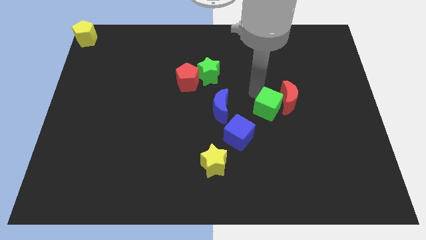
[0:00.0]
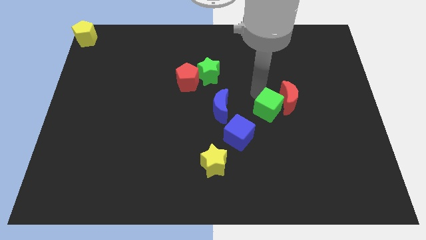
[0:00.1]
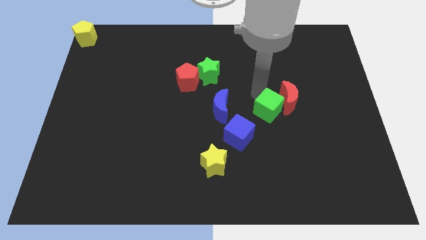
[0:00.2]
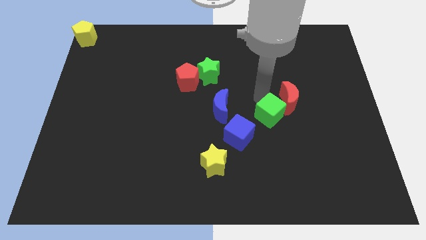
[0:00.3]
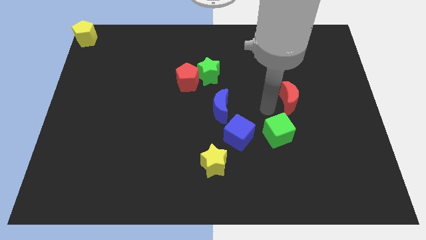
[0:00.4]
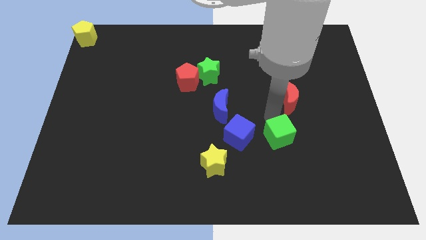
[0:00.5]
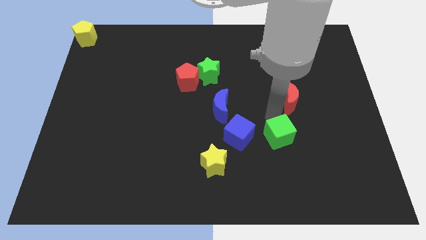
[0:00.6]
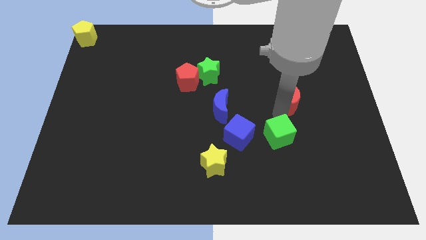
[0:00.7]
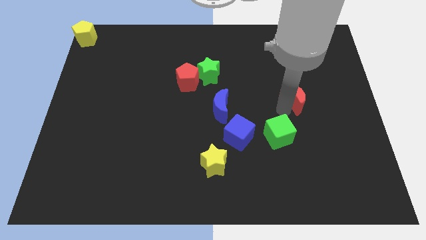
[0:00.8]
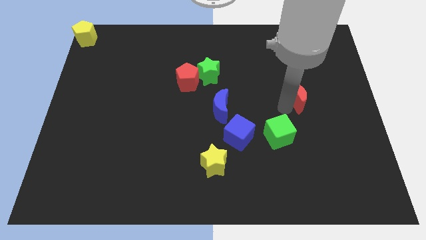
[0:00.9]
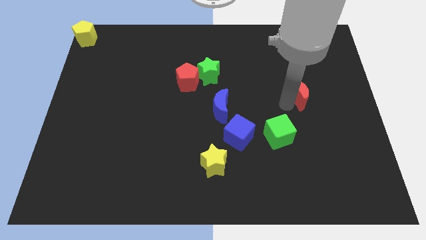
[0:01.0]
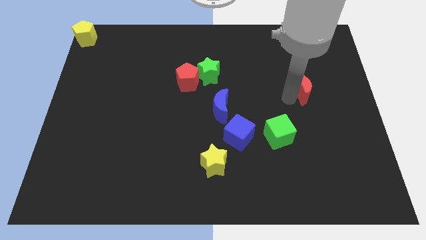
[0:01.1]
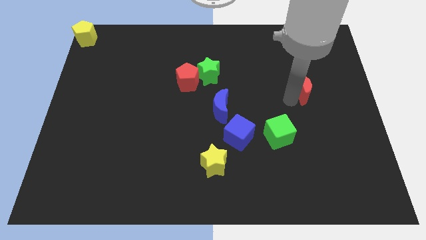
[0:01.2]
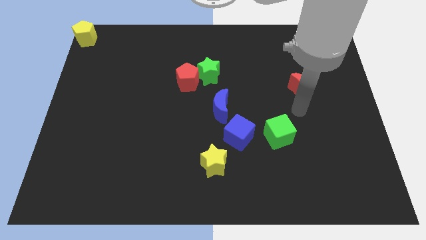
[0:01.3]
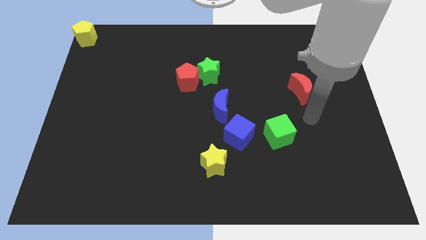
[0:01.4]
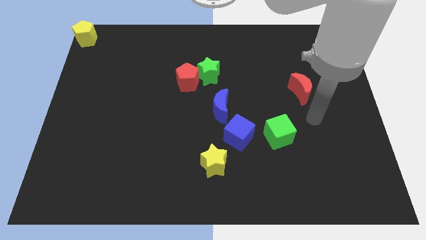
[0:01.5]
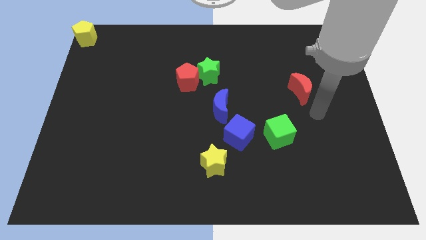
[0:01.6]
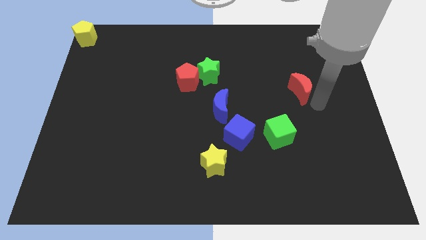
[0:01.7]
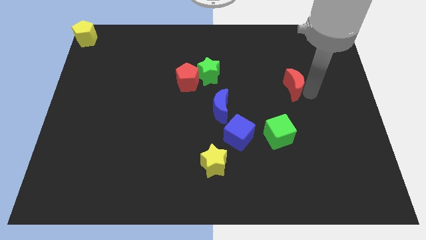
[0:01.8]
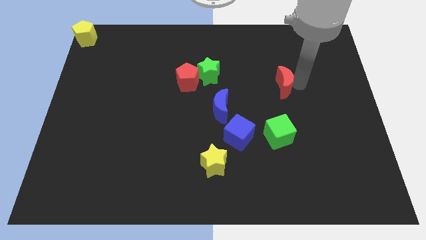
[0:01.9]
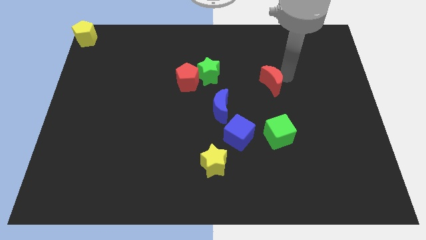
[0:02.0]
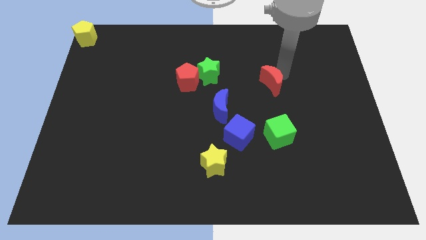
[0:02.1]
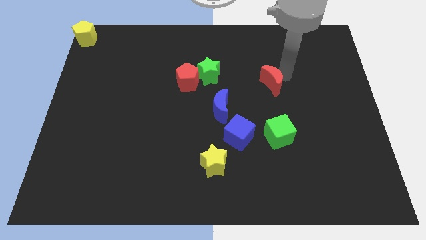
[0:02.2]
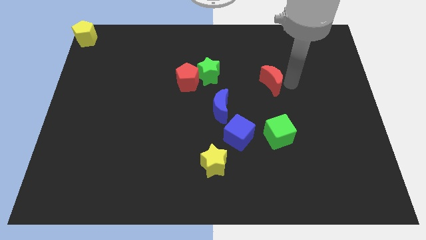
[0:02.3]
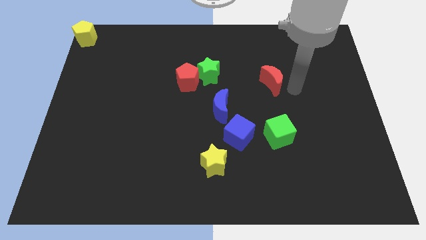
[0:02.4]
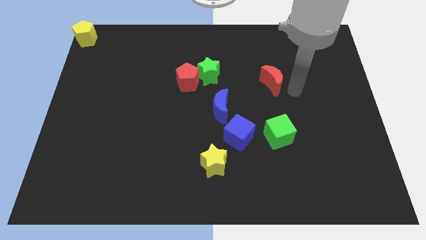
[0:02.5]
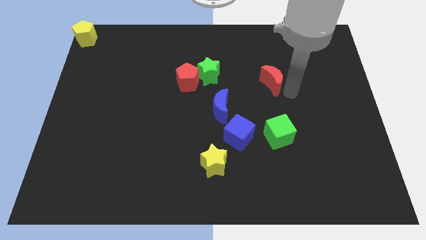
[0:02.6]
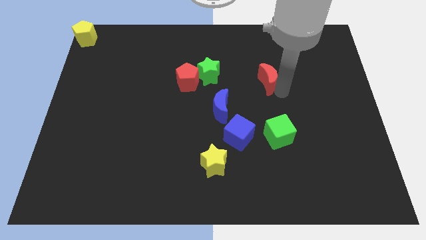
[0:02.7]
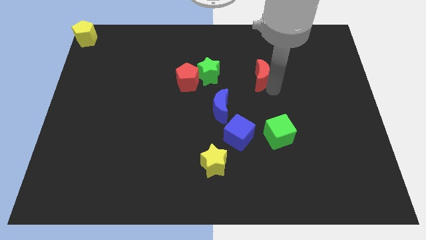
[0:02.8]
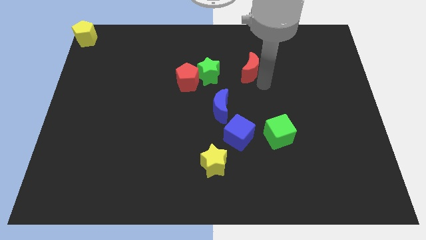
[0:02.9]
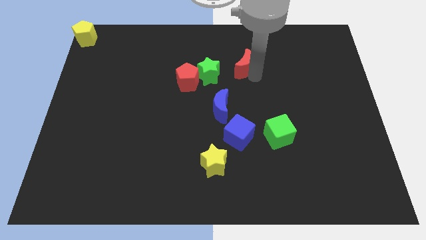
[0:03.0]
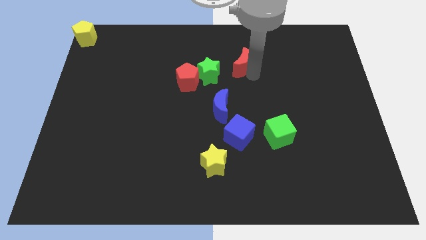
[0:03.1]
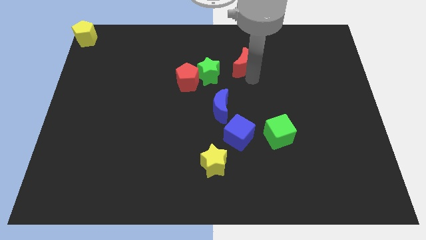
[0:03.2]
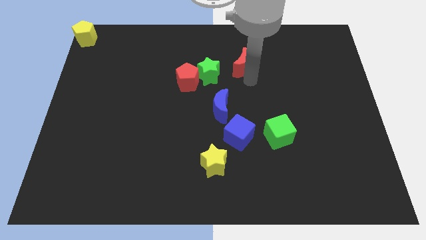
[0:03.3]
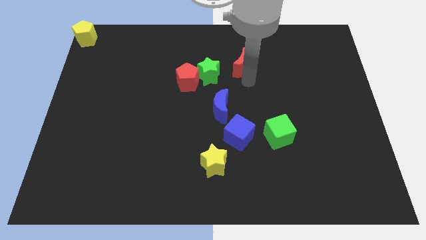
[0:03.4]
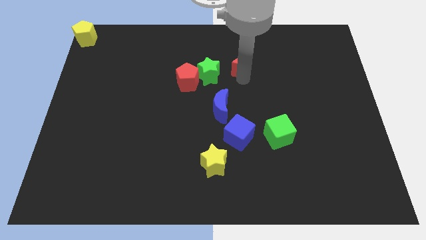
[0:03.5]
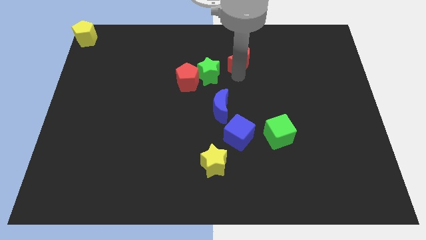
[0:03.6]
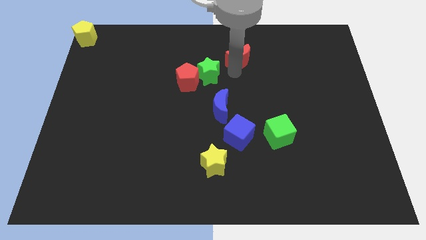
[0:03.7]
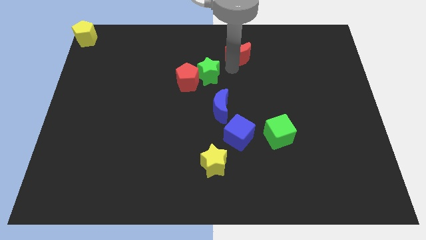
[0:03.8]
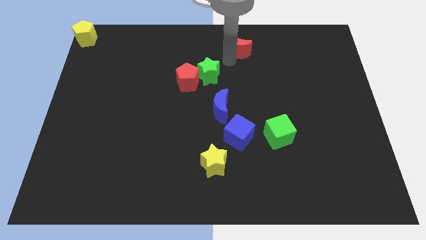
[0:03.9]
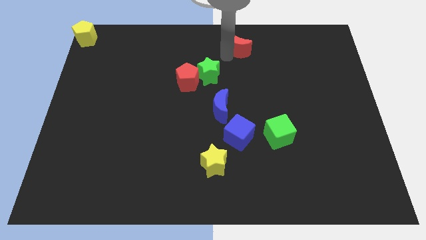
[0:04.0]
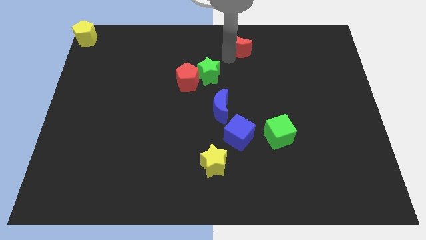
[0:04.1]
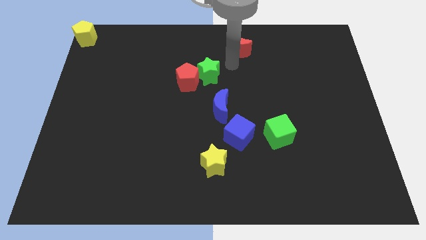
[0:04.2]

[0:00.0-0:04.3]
move the red crescent diagonal to green cube

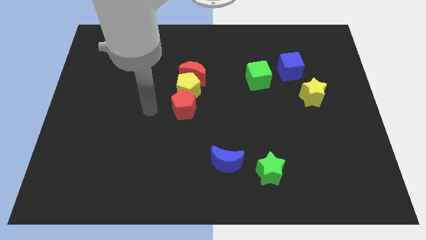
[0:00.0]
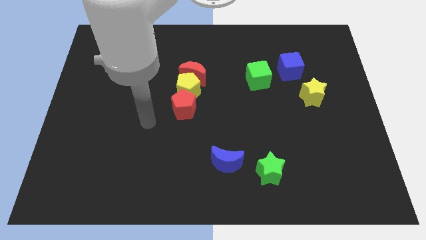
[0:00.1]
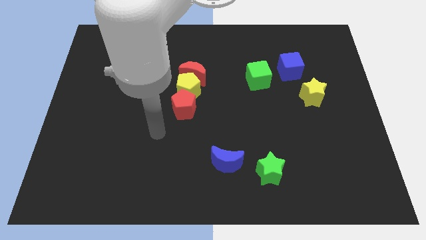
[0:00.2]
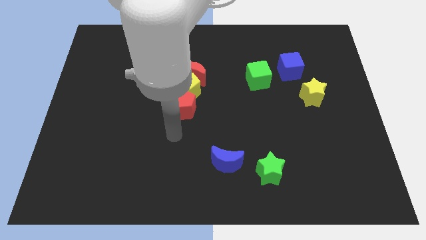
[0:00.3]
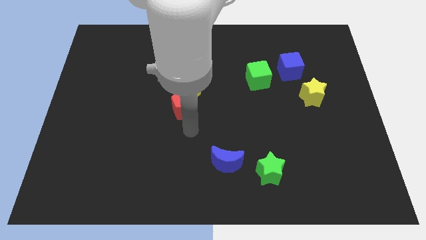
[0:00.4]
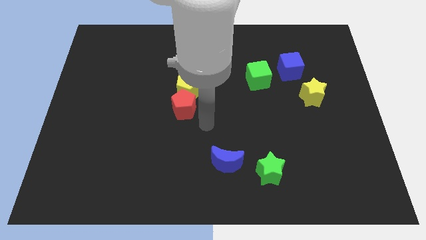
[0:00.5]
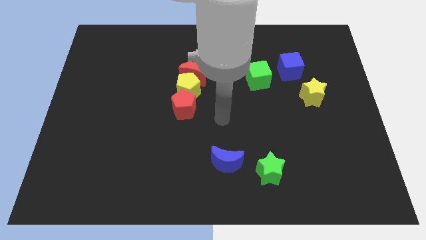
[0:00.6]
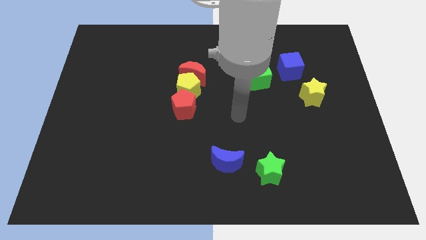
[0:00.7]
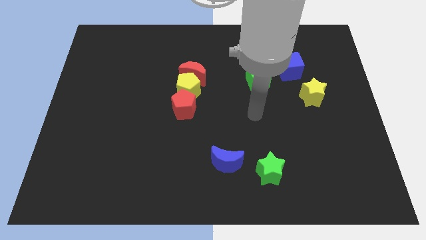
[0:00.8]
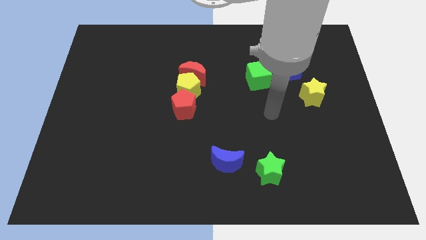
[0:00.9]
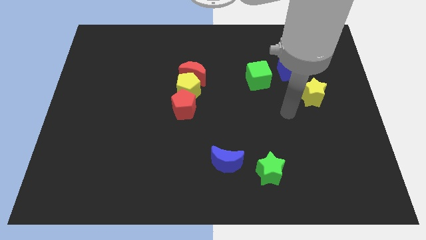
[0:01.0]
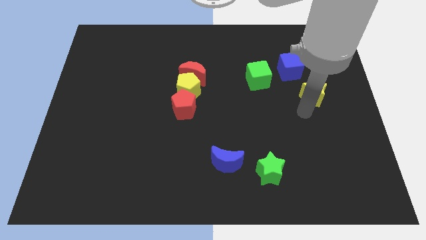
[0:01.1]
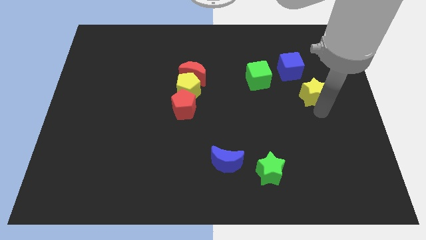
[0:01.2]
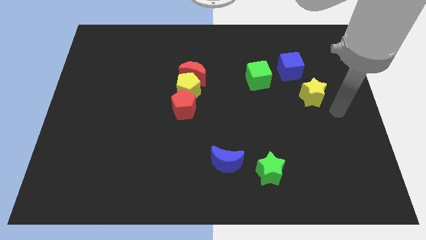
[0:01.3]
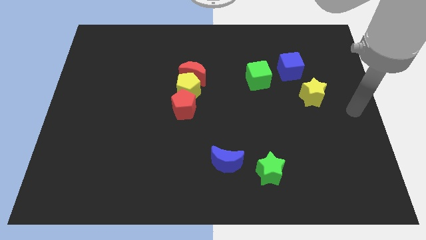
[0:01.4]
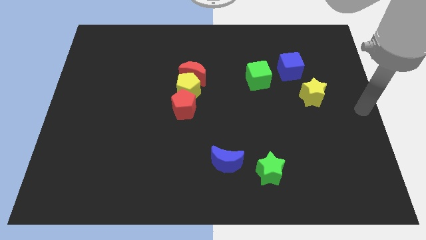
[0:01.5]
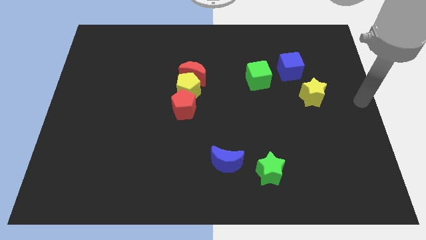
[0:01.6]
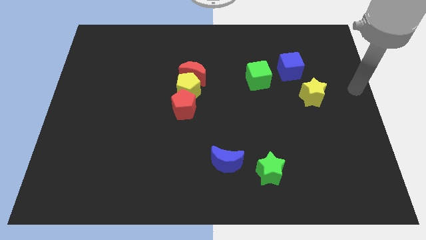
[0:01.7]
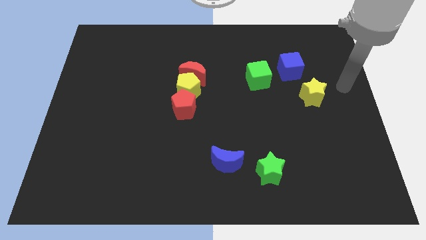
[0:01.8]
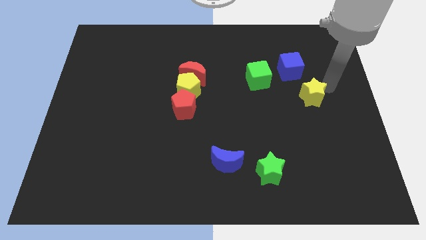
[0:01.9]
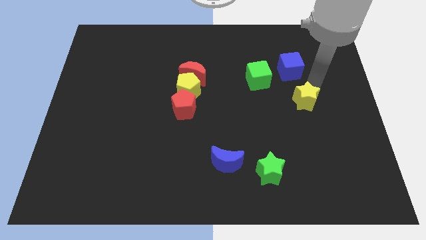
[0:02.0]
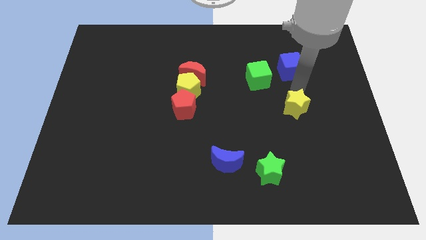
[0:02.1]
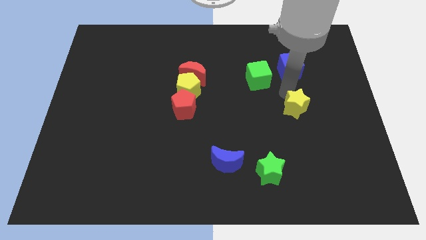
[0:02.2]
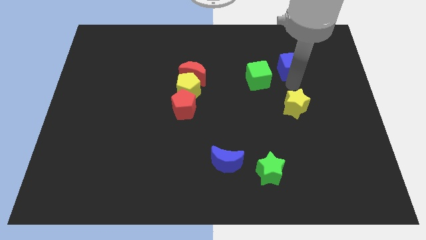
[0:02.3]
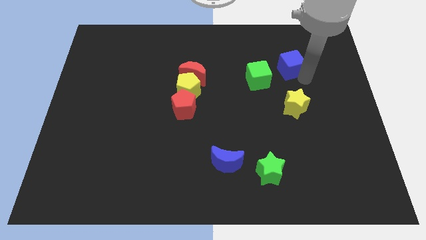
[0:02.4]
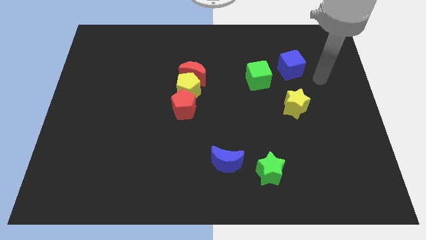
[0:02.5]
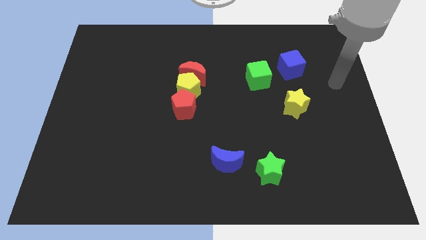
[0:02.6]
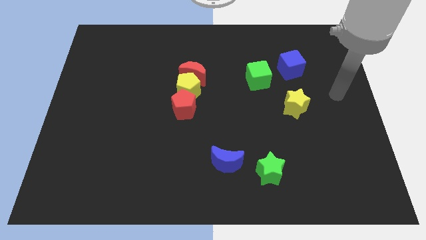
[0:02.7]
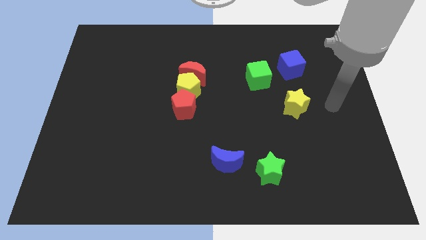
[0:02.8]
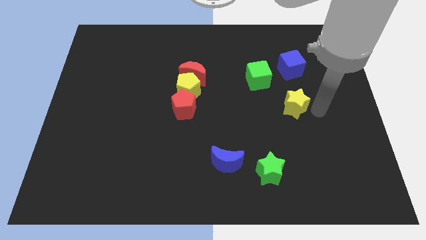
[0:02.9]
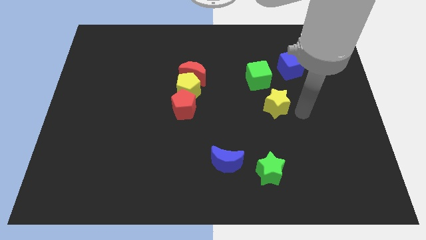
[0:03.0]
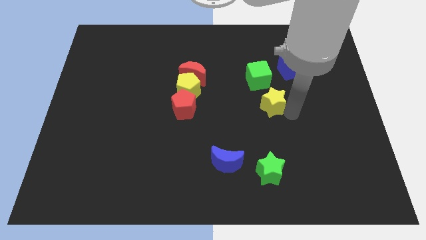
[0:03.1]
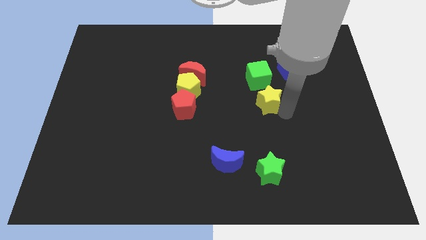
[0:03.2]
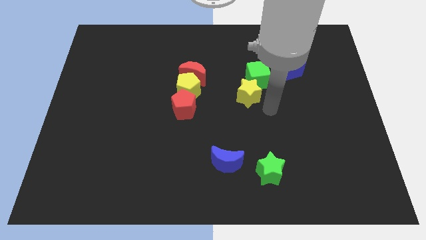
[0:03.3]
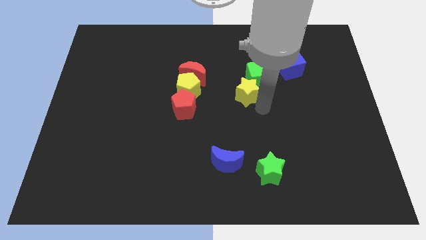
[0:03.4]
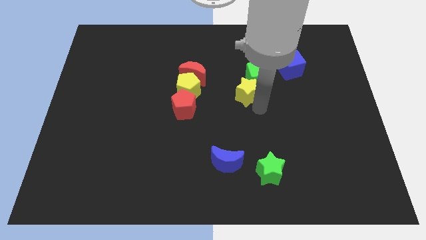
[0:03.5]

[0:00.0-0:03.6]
move the yellow star at the bottom left the green cube

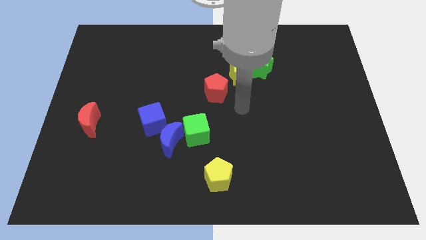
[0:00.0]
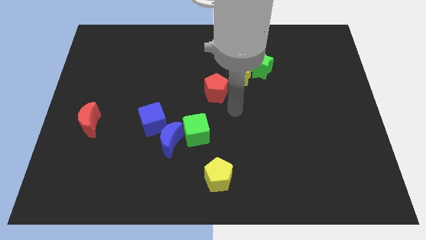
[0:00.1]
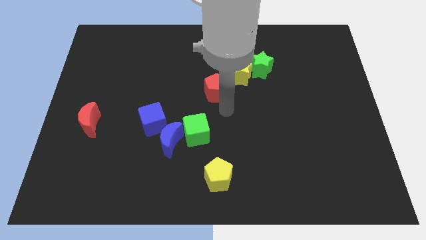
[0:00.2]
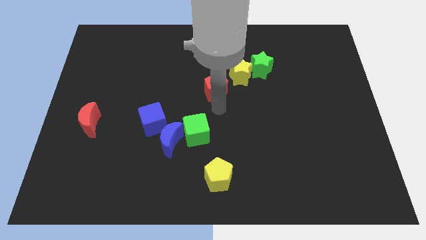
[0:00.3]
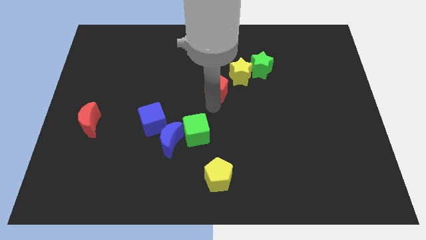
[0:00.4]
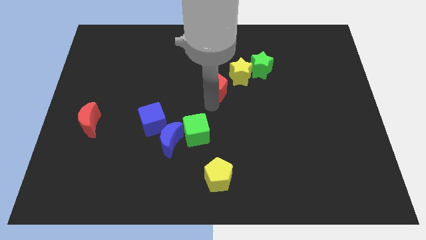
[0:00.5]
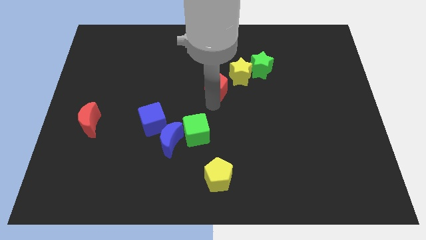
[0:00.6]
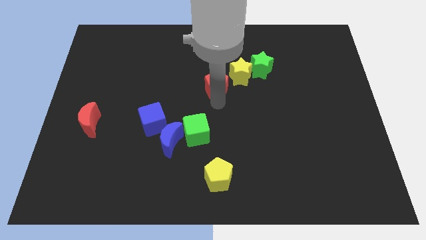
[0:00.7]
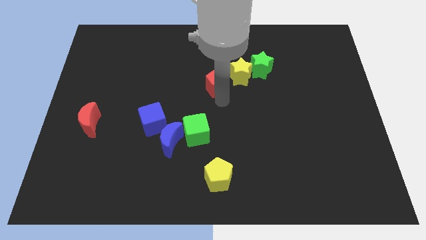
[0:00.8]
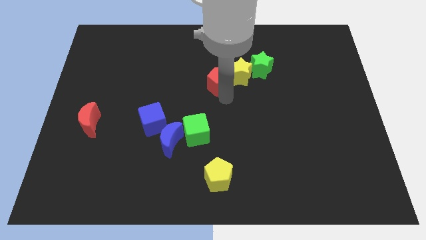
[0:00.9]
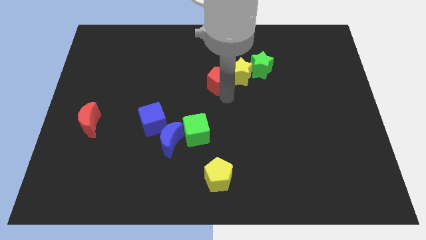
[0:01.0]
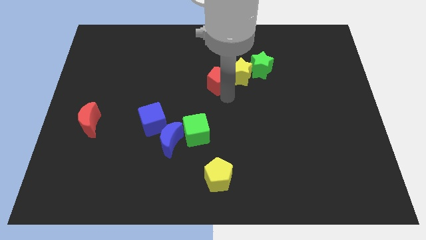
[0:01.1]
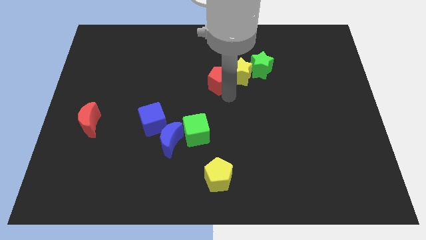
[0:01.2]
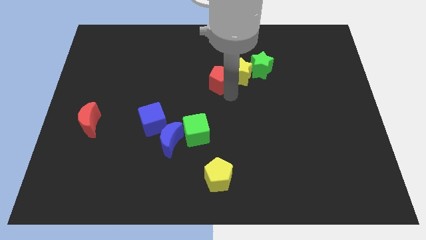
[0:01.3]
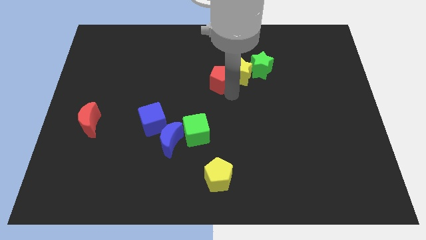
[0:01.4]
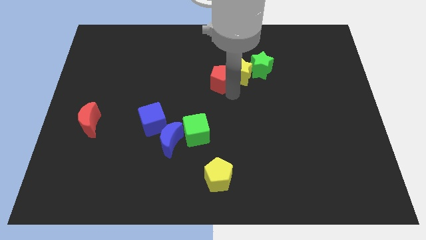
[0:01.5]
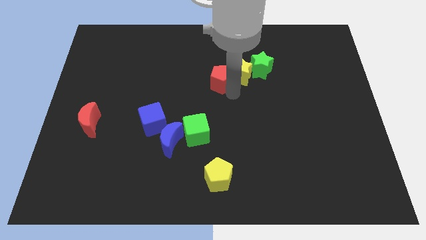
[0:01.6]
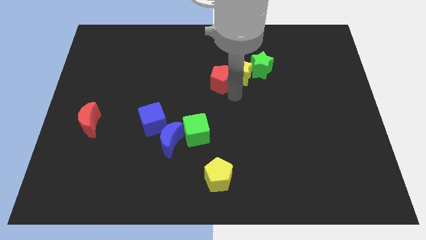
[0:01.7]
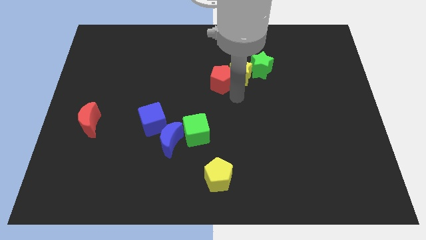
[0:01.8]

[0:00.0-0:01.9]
move the red pentagon to the bottom left of the yellow star
